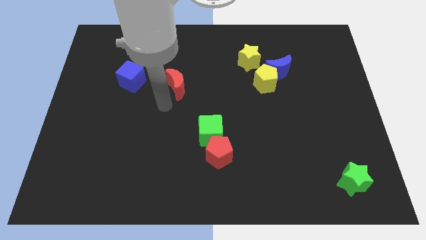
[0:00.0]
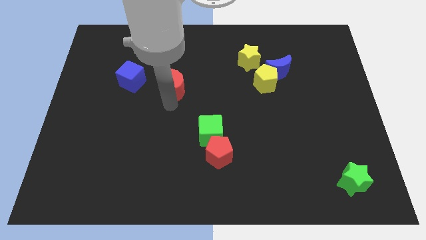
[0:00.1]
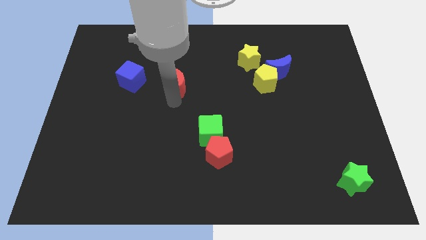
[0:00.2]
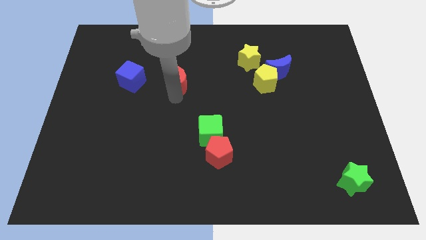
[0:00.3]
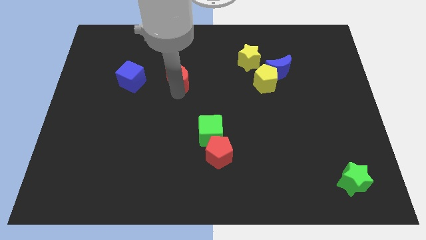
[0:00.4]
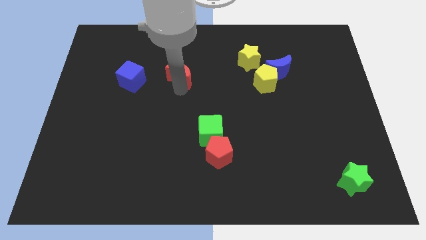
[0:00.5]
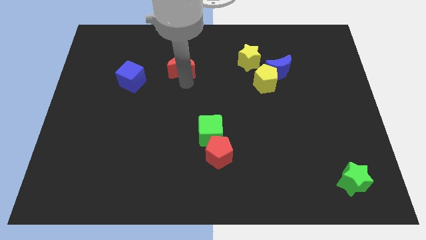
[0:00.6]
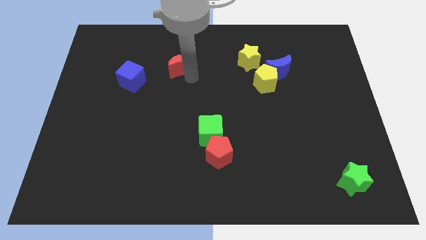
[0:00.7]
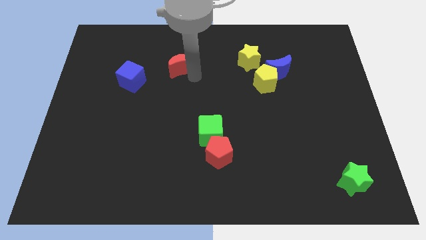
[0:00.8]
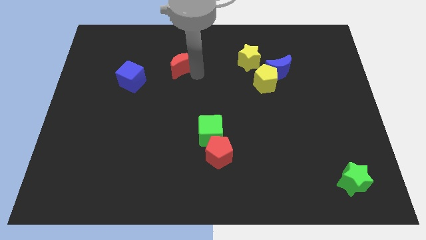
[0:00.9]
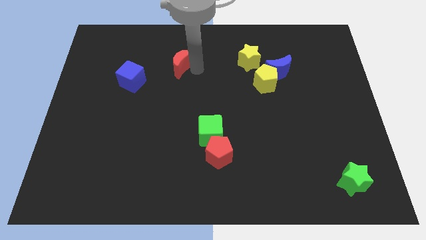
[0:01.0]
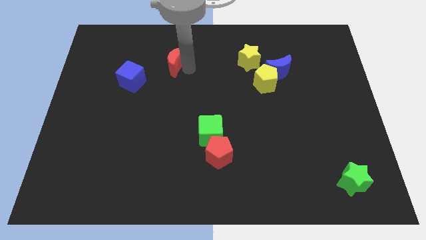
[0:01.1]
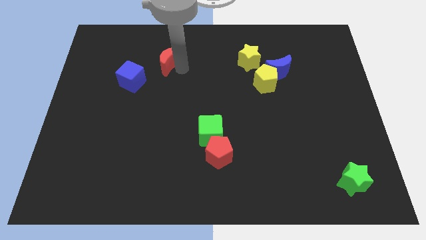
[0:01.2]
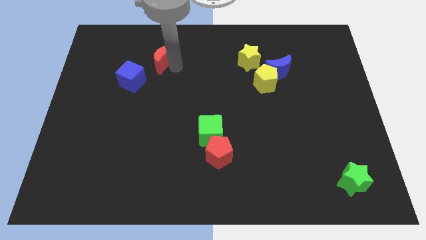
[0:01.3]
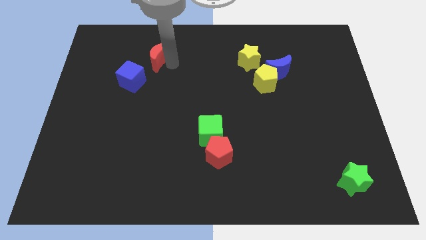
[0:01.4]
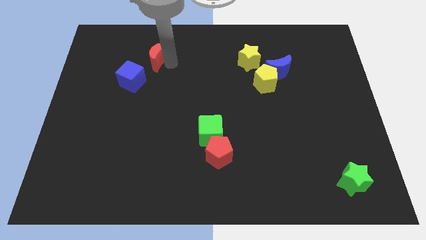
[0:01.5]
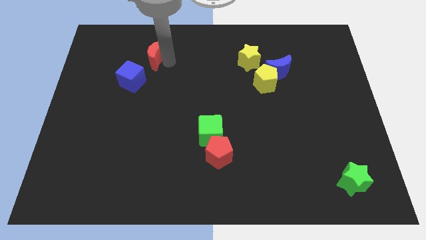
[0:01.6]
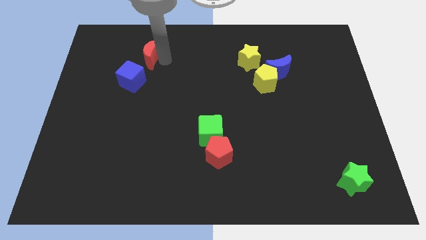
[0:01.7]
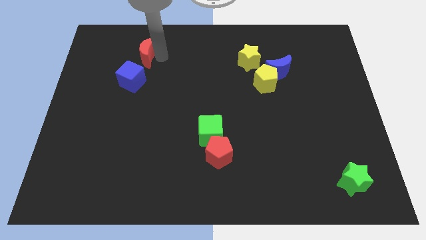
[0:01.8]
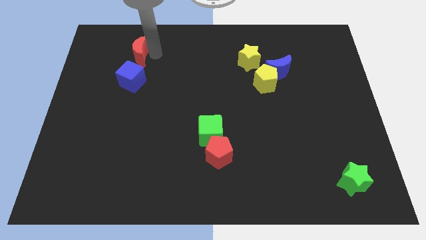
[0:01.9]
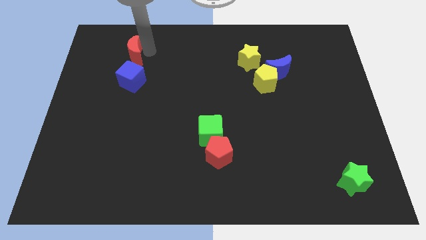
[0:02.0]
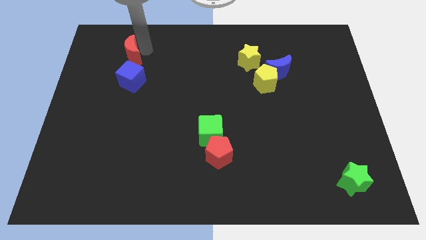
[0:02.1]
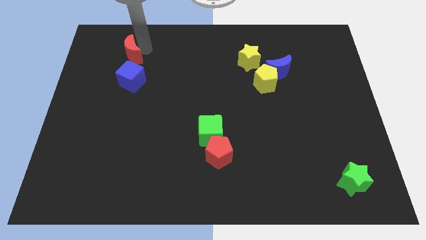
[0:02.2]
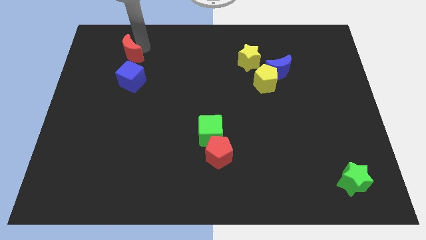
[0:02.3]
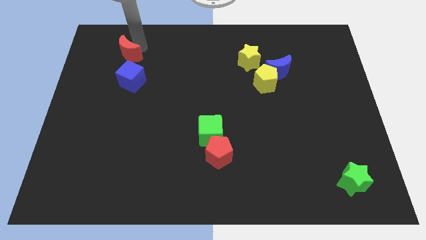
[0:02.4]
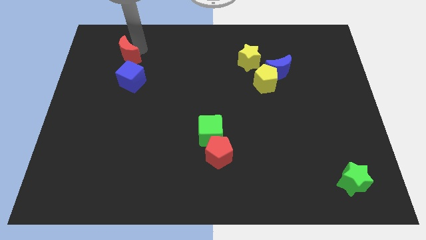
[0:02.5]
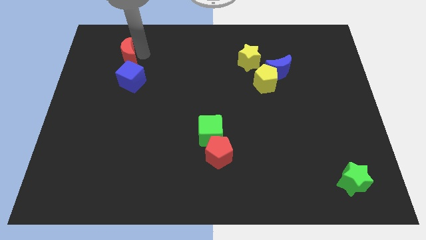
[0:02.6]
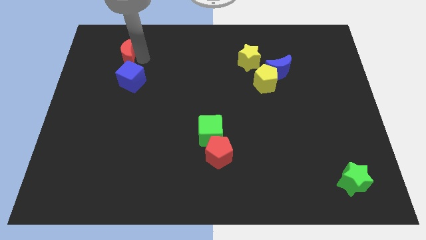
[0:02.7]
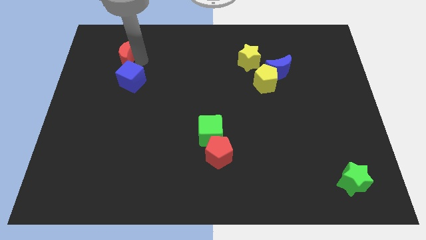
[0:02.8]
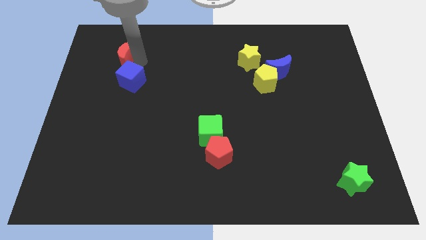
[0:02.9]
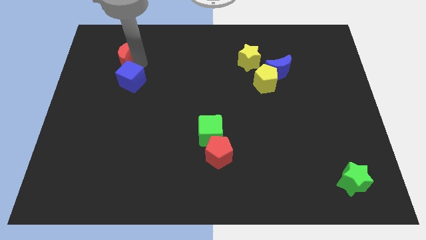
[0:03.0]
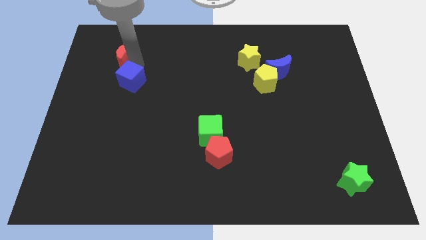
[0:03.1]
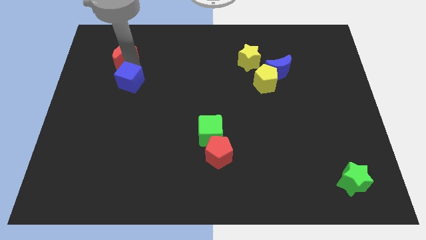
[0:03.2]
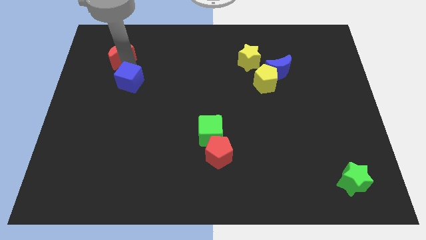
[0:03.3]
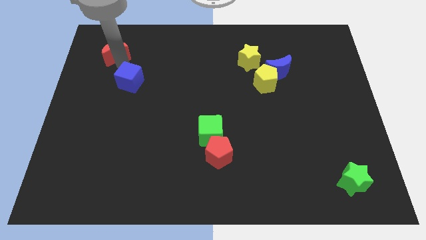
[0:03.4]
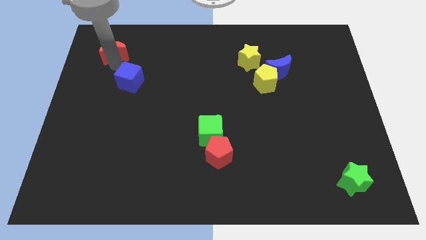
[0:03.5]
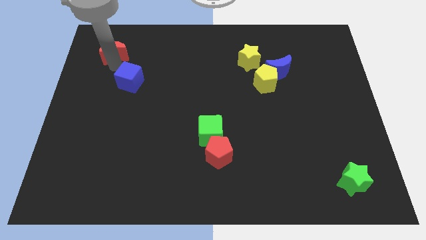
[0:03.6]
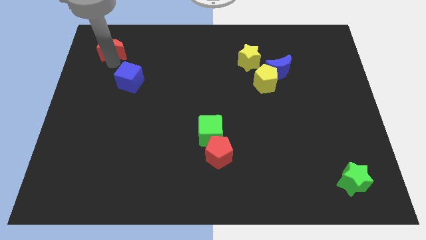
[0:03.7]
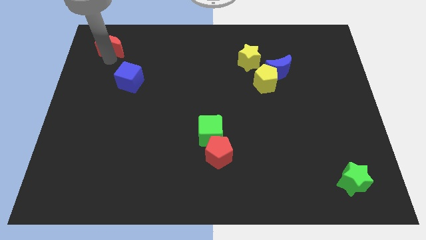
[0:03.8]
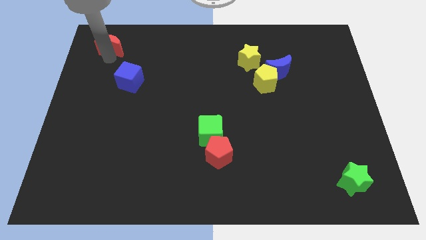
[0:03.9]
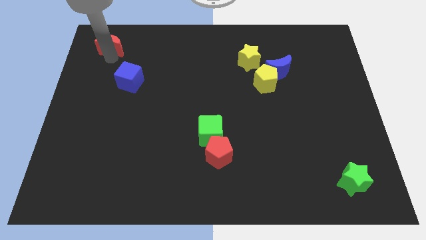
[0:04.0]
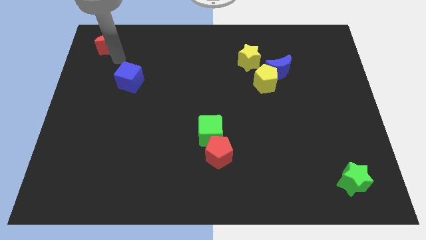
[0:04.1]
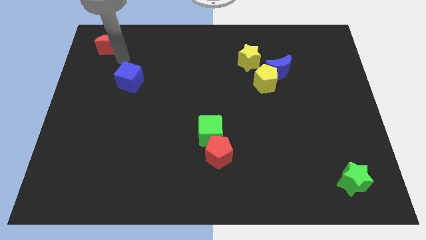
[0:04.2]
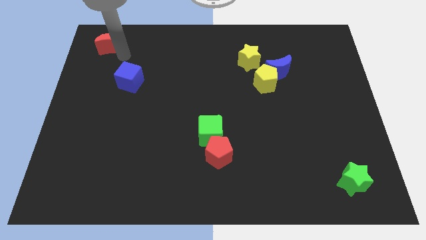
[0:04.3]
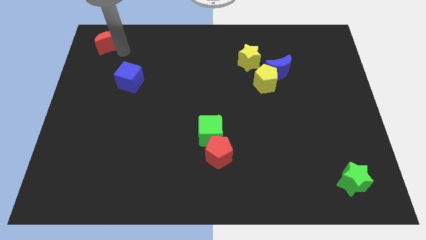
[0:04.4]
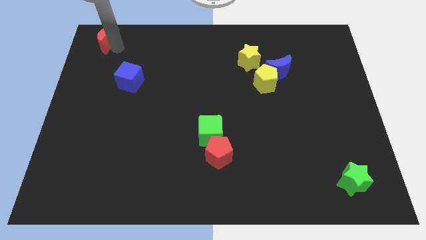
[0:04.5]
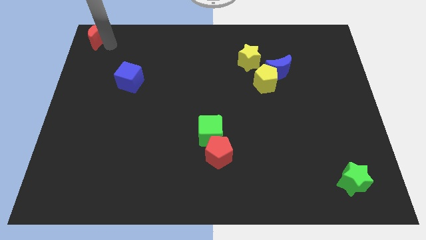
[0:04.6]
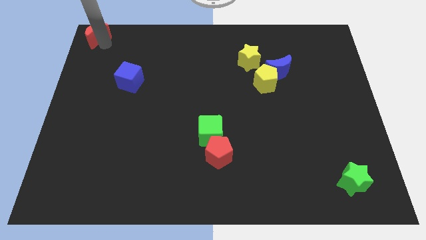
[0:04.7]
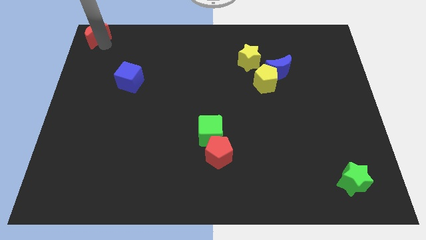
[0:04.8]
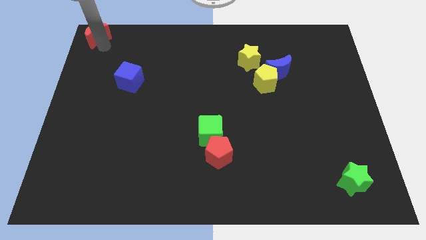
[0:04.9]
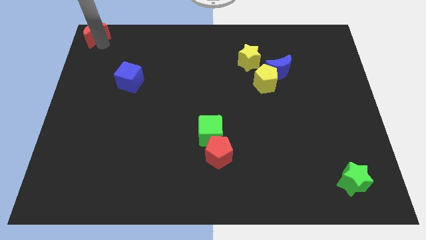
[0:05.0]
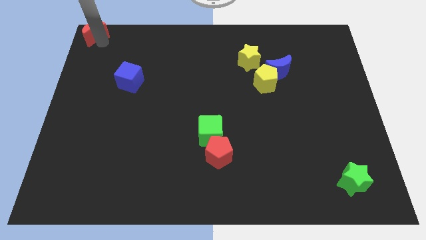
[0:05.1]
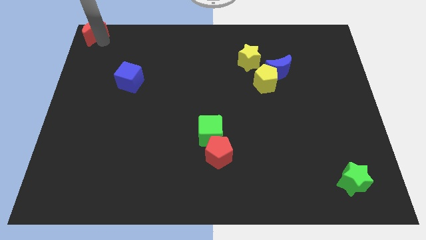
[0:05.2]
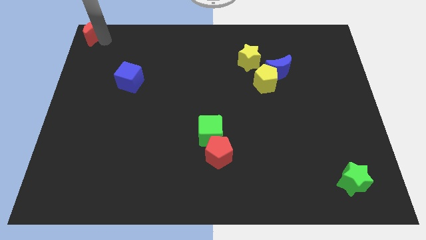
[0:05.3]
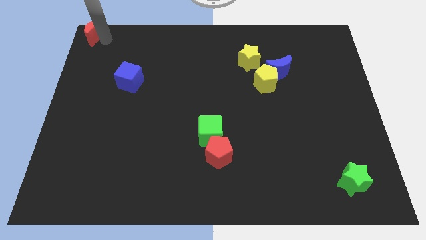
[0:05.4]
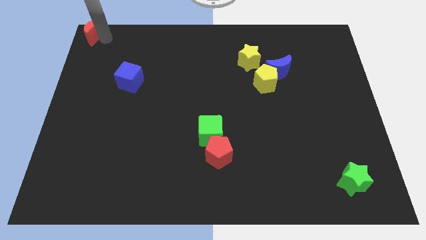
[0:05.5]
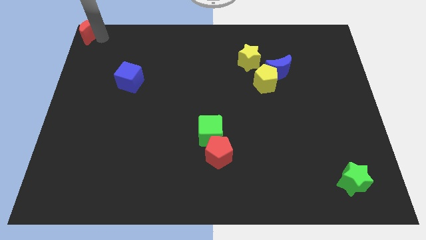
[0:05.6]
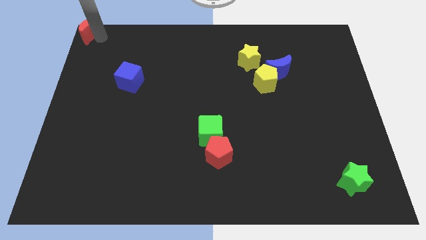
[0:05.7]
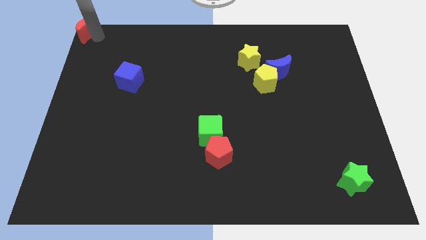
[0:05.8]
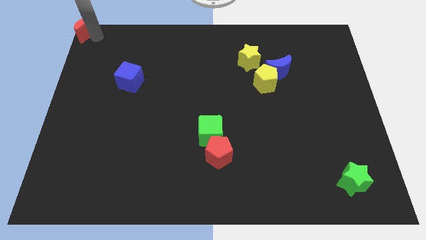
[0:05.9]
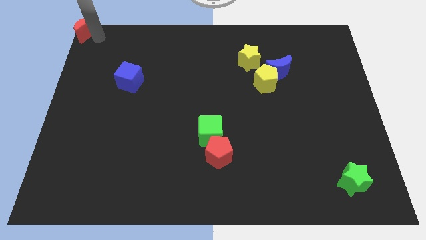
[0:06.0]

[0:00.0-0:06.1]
place the red moon at the top left corner of the board

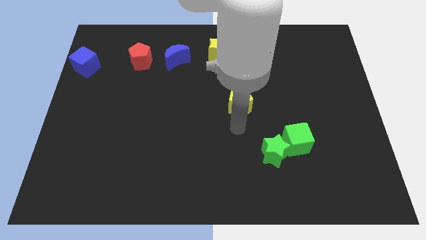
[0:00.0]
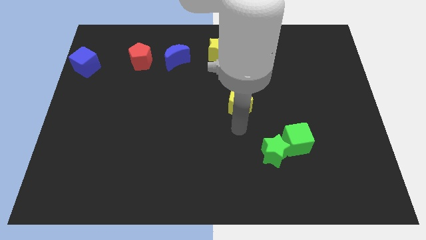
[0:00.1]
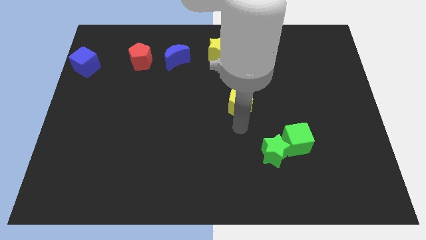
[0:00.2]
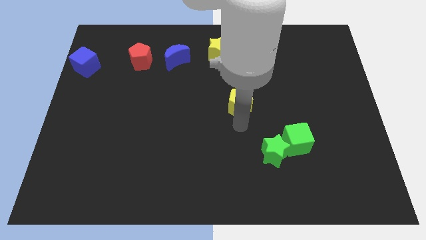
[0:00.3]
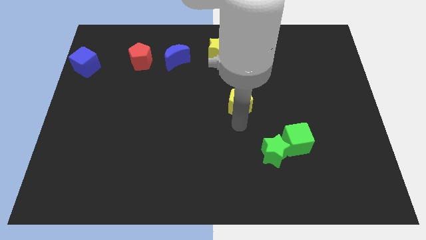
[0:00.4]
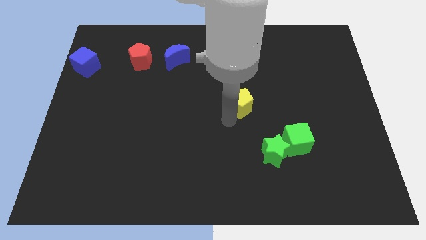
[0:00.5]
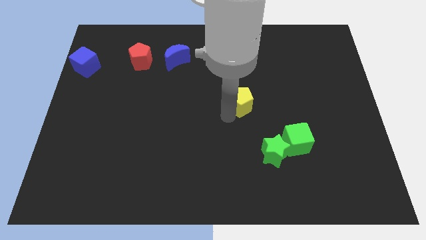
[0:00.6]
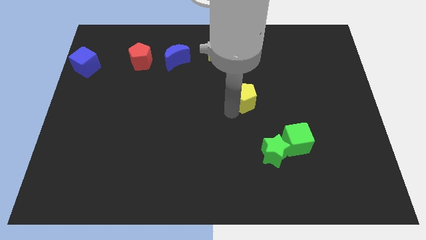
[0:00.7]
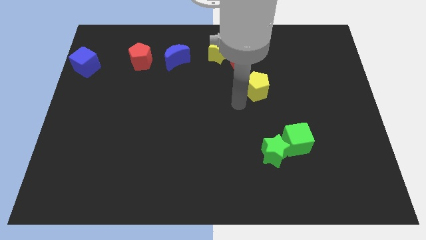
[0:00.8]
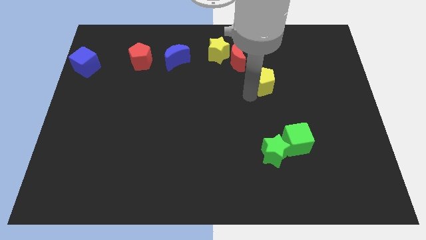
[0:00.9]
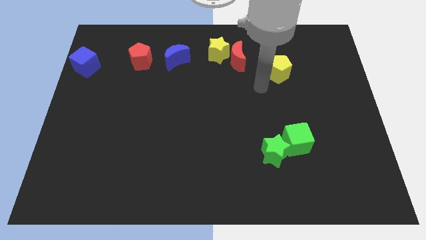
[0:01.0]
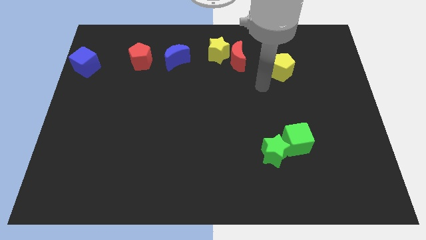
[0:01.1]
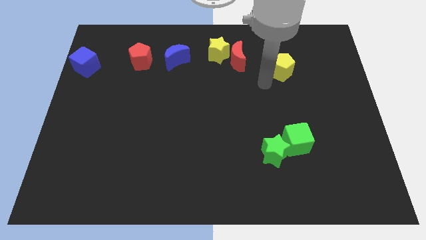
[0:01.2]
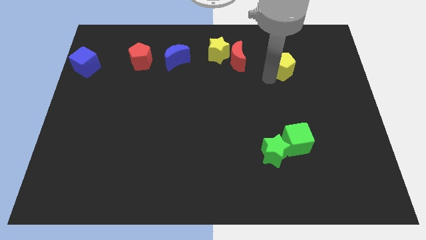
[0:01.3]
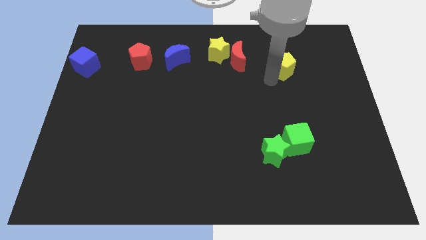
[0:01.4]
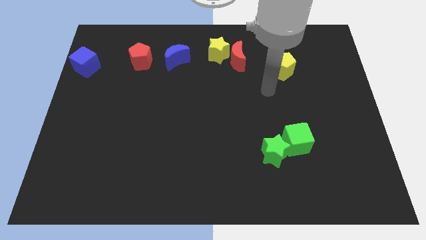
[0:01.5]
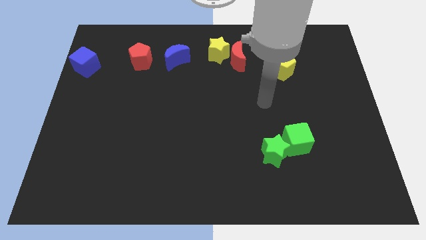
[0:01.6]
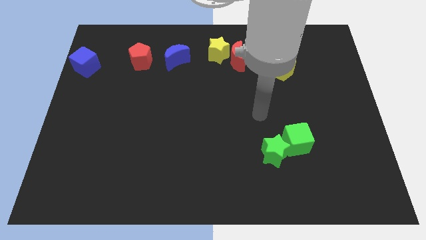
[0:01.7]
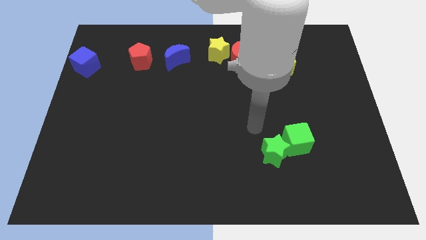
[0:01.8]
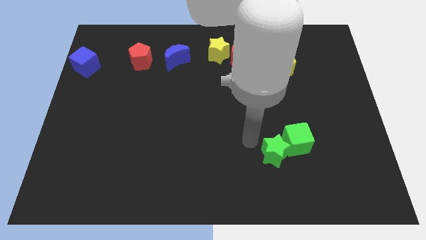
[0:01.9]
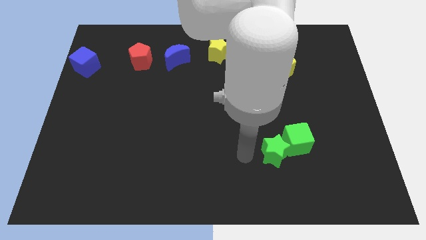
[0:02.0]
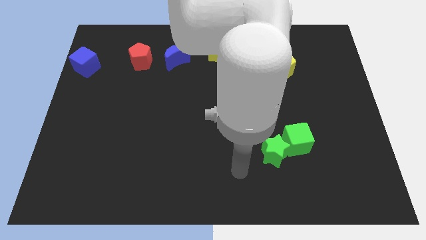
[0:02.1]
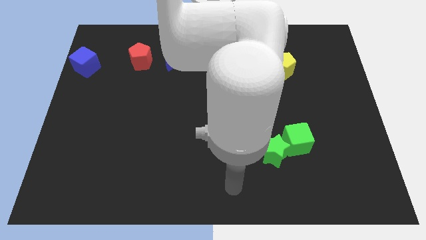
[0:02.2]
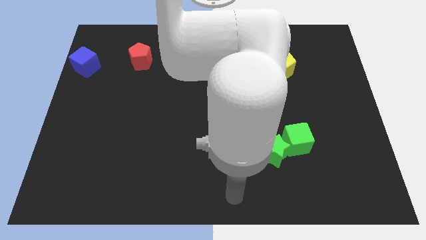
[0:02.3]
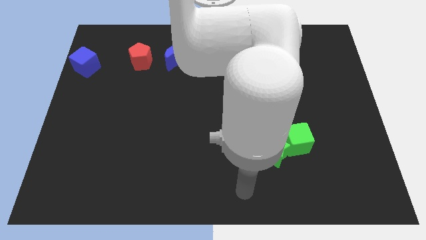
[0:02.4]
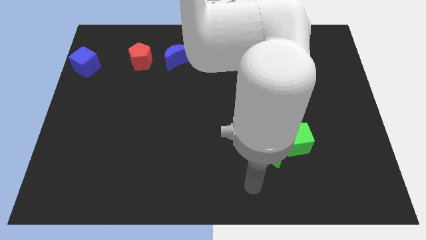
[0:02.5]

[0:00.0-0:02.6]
move the yellow pentagon to the right of the red crescent

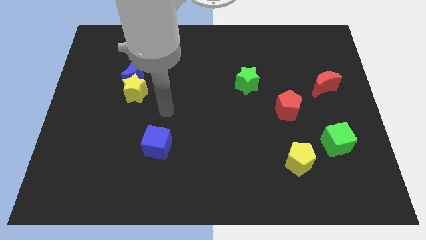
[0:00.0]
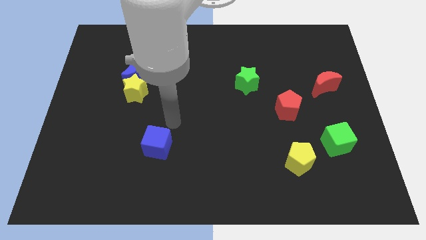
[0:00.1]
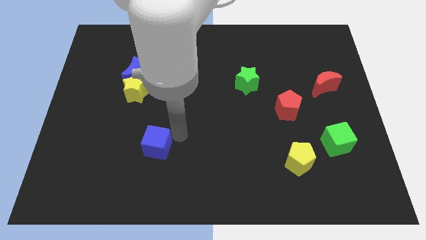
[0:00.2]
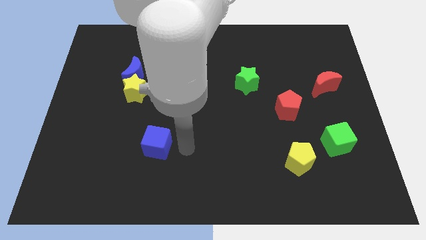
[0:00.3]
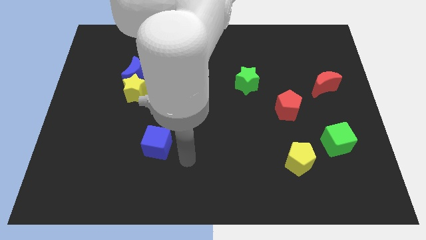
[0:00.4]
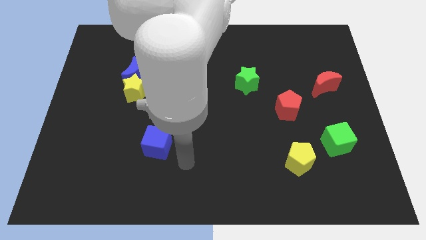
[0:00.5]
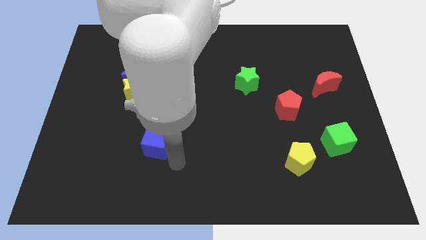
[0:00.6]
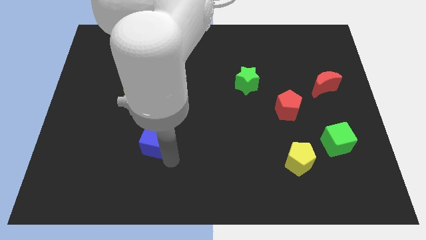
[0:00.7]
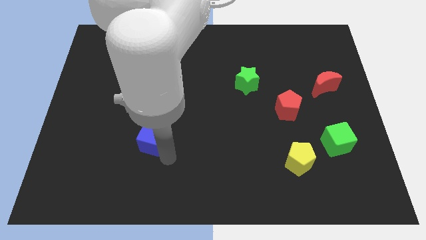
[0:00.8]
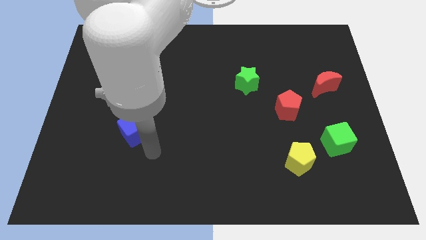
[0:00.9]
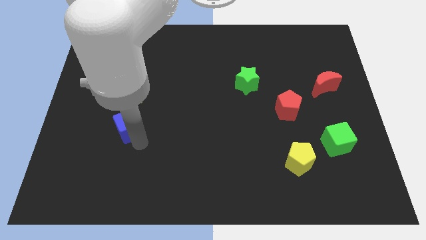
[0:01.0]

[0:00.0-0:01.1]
push blue cube diagonally upwards
